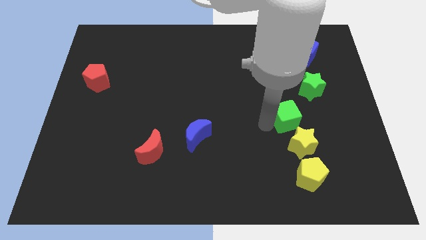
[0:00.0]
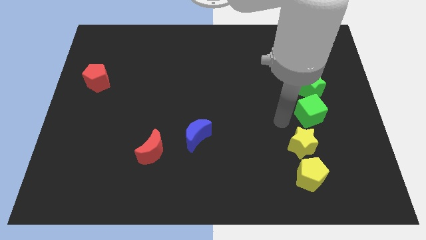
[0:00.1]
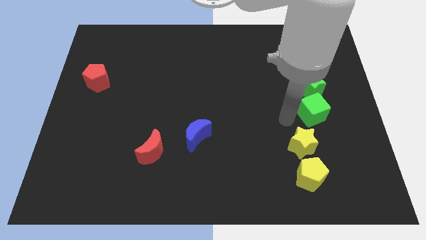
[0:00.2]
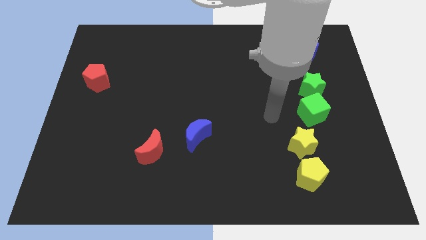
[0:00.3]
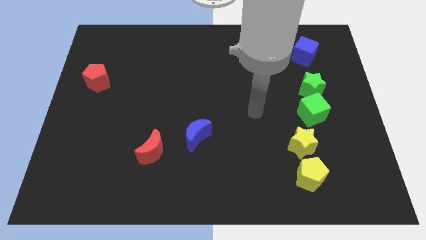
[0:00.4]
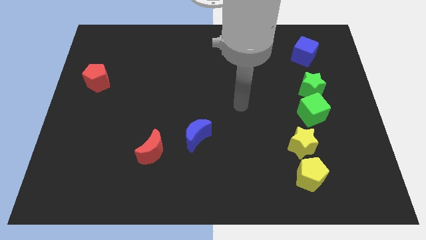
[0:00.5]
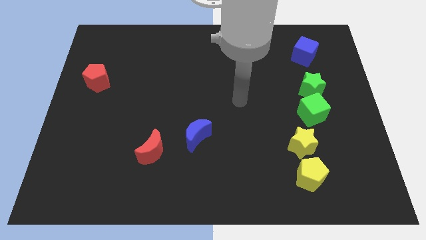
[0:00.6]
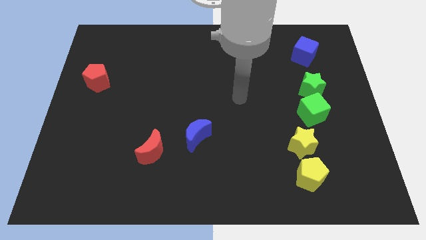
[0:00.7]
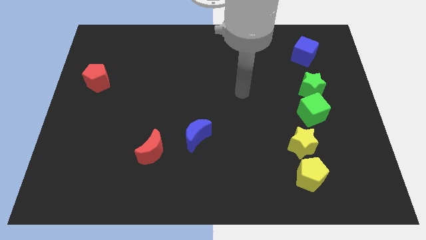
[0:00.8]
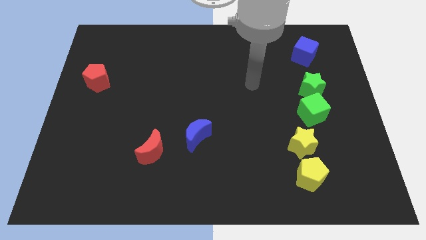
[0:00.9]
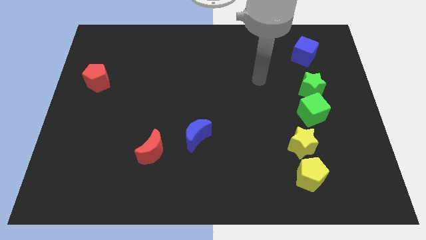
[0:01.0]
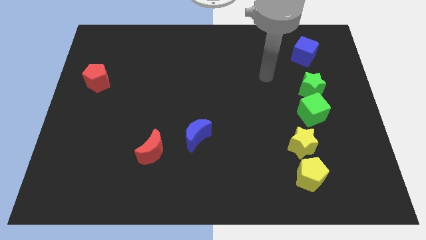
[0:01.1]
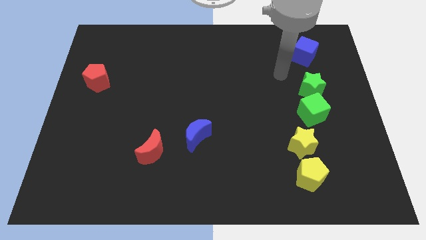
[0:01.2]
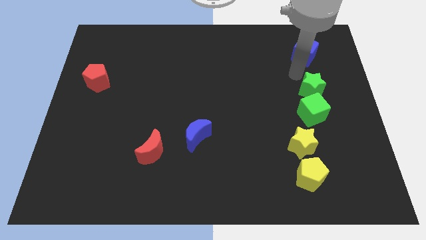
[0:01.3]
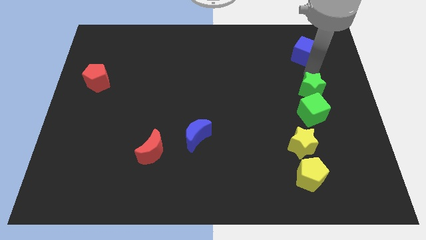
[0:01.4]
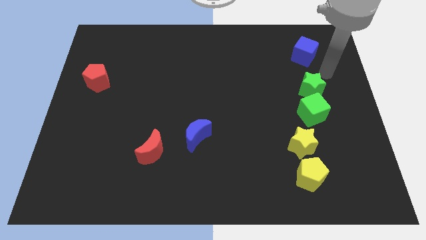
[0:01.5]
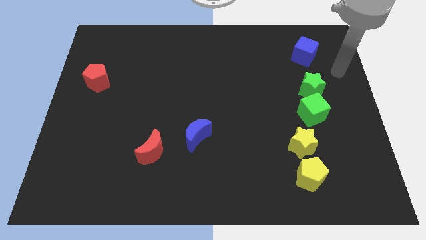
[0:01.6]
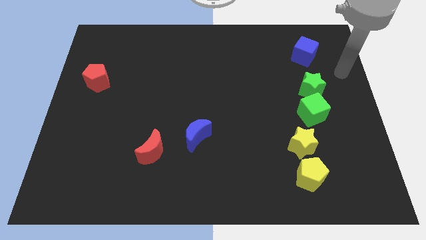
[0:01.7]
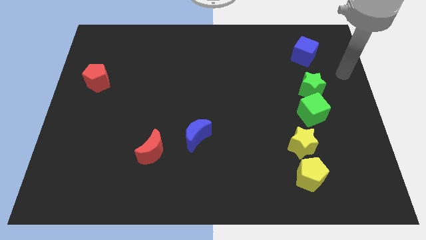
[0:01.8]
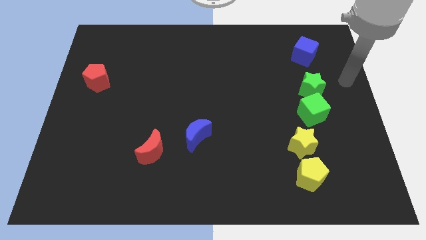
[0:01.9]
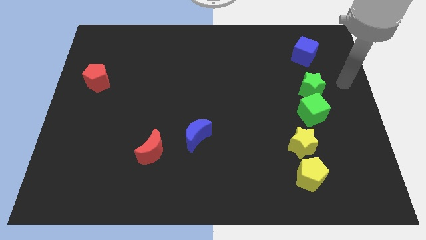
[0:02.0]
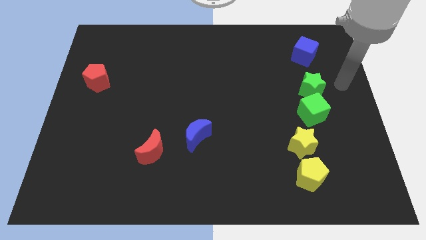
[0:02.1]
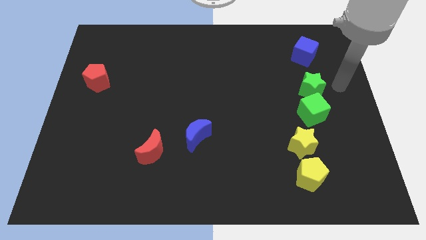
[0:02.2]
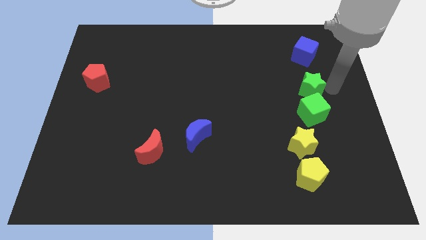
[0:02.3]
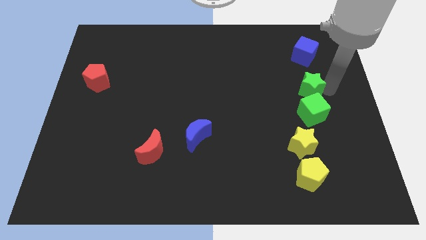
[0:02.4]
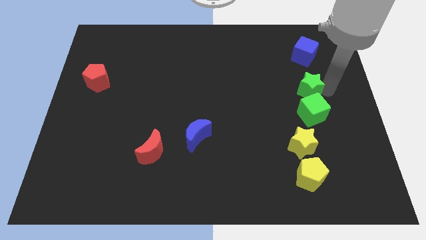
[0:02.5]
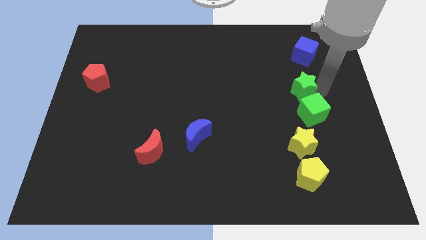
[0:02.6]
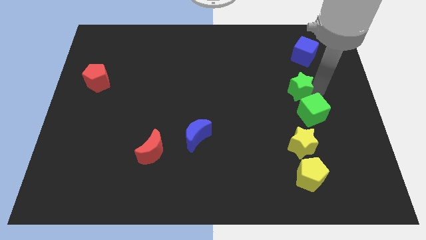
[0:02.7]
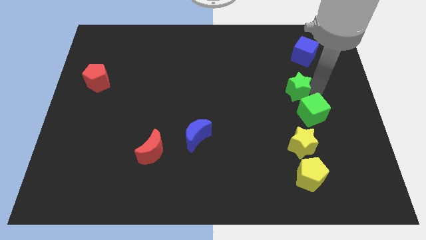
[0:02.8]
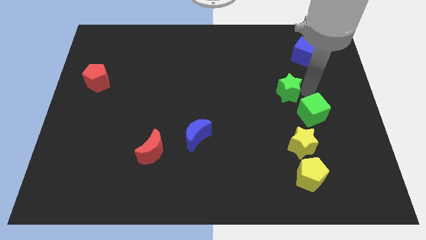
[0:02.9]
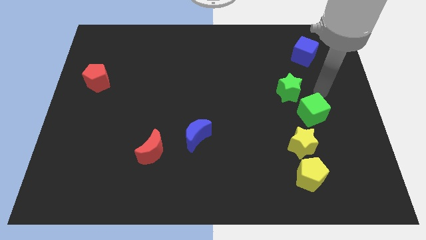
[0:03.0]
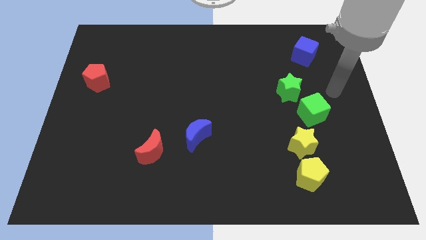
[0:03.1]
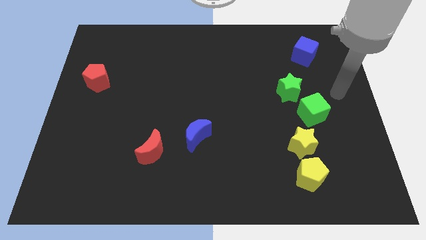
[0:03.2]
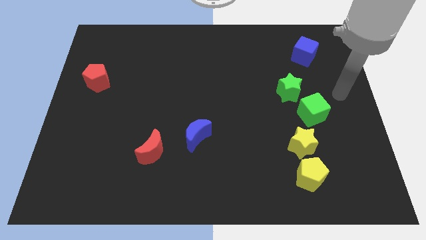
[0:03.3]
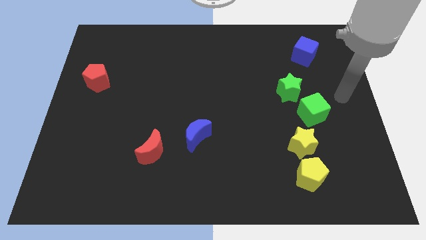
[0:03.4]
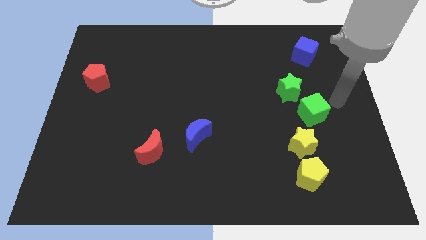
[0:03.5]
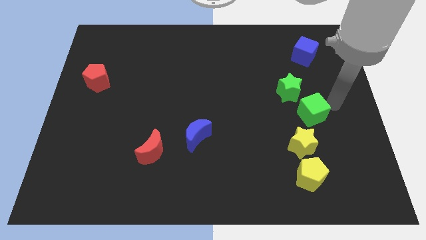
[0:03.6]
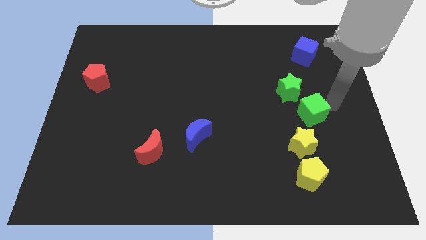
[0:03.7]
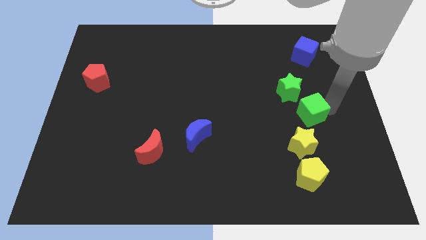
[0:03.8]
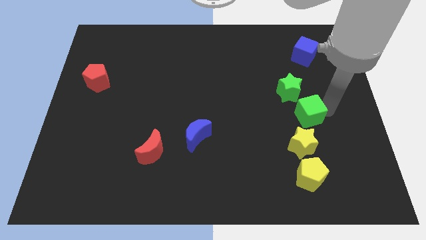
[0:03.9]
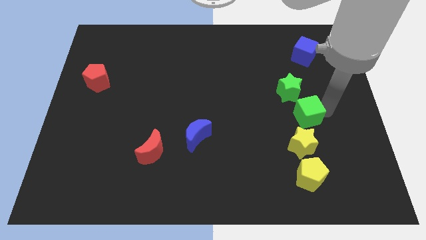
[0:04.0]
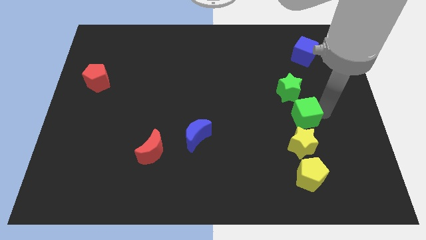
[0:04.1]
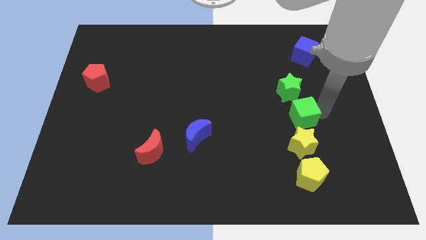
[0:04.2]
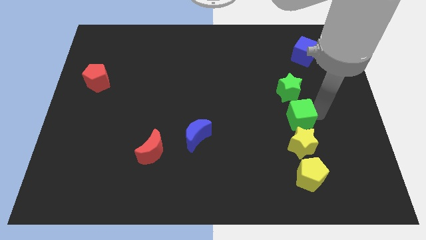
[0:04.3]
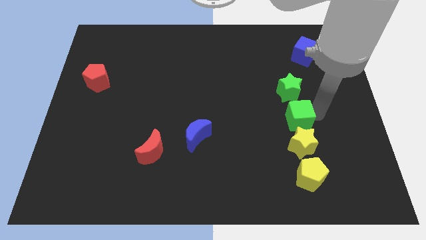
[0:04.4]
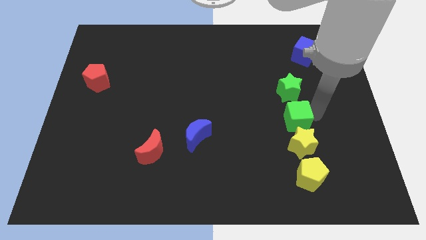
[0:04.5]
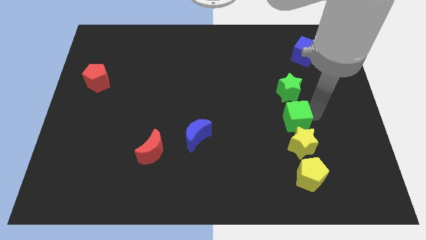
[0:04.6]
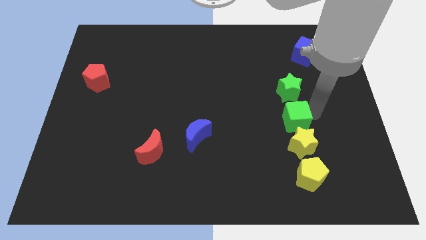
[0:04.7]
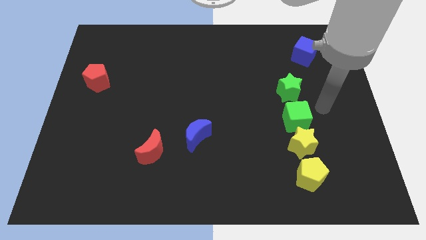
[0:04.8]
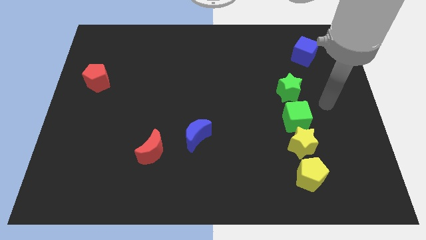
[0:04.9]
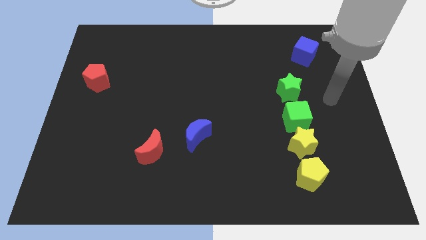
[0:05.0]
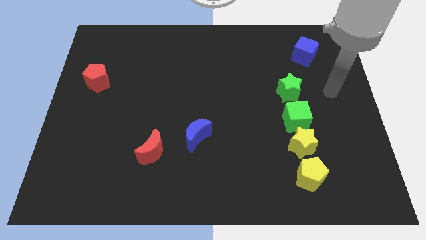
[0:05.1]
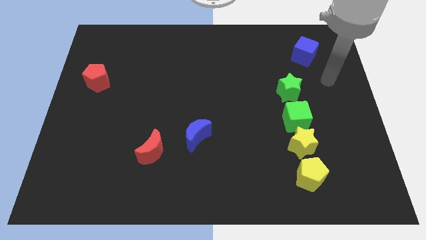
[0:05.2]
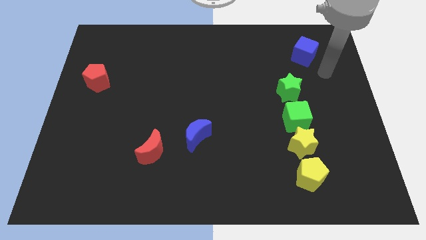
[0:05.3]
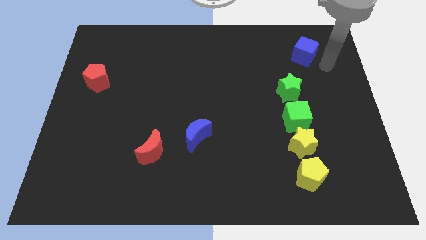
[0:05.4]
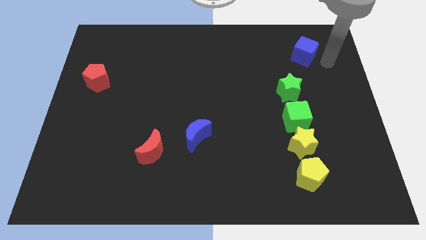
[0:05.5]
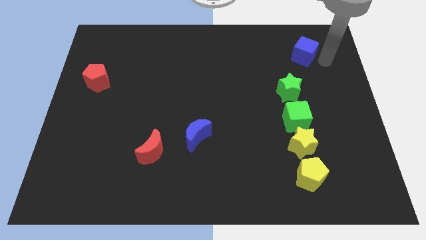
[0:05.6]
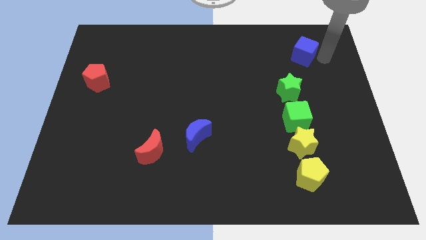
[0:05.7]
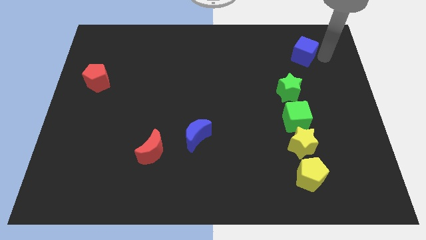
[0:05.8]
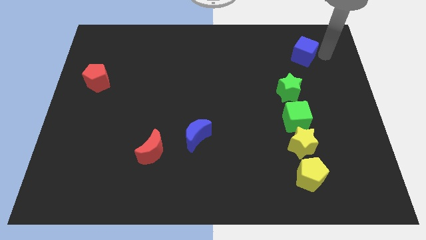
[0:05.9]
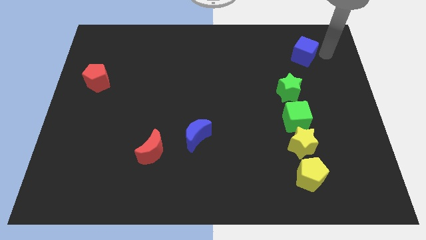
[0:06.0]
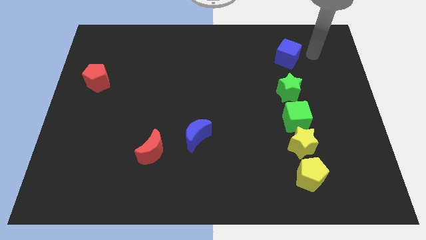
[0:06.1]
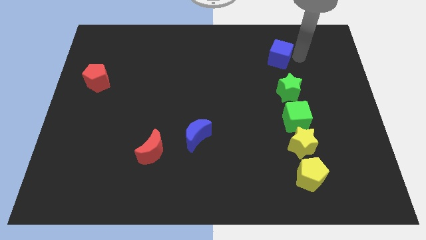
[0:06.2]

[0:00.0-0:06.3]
arrange a group of blocks in a line

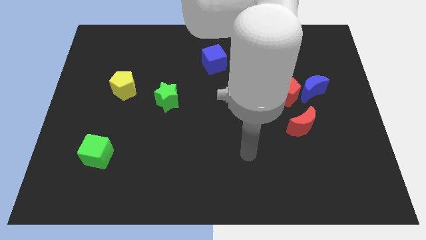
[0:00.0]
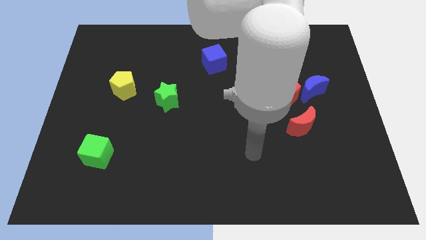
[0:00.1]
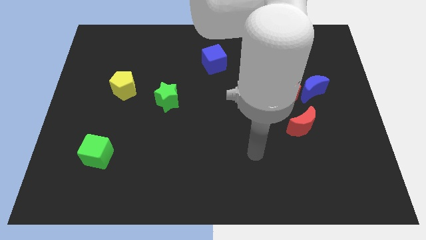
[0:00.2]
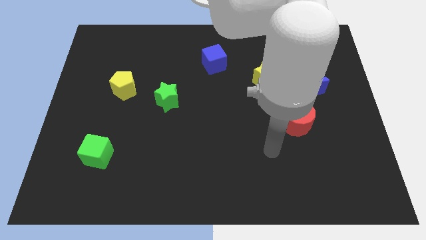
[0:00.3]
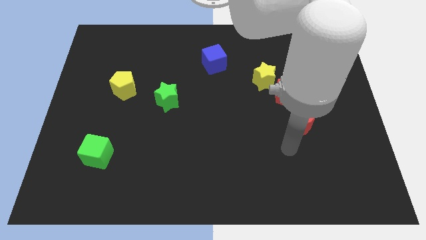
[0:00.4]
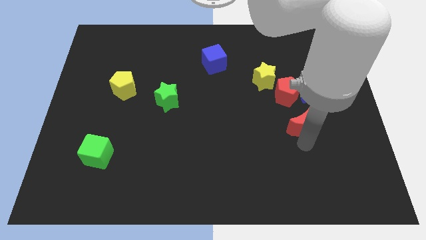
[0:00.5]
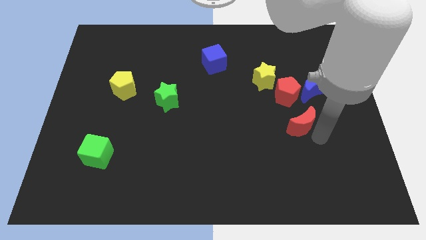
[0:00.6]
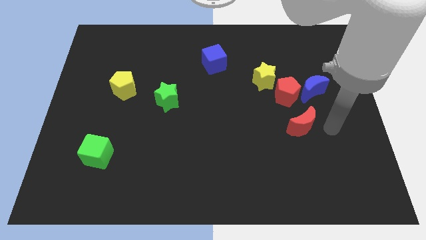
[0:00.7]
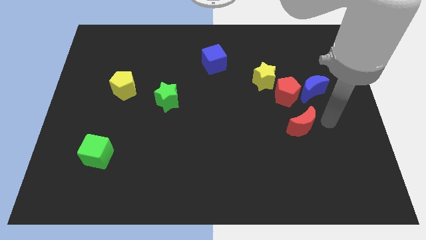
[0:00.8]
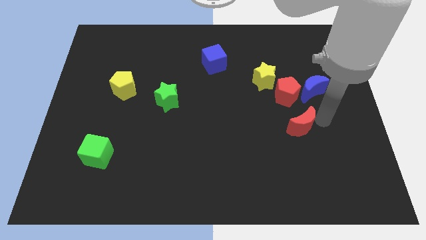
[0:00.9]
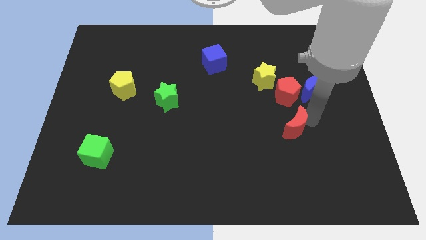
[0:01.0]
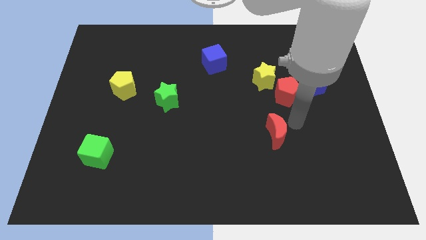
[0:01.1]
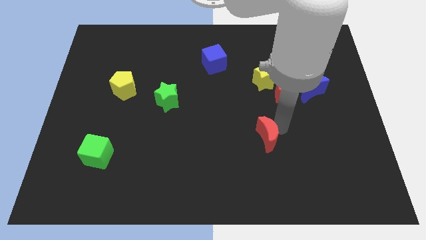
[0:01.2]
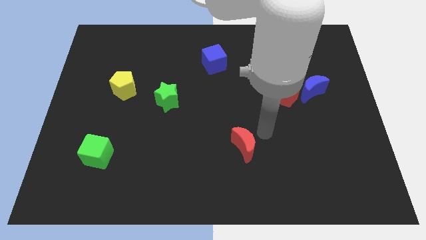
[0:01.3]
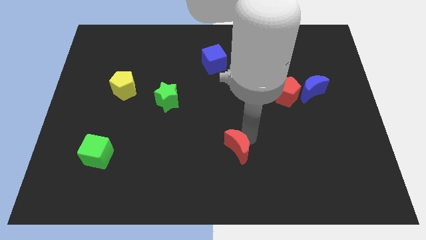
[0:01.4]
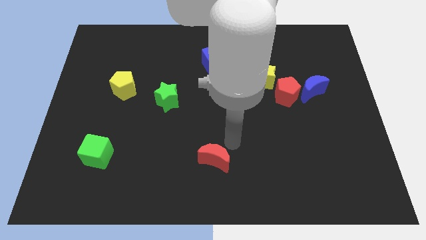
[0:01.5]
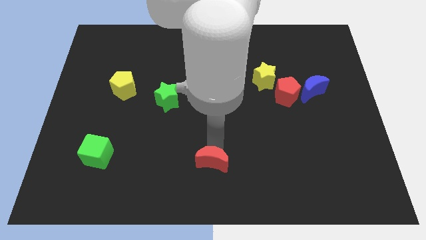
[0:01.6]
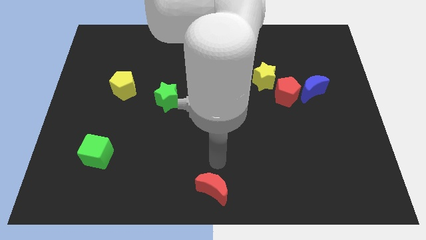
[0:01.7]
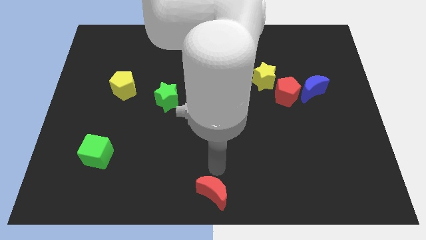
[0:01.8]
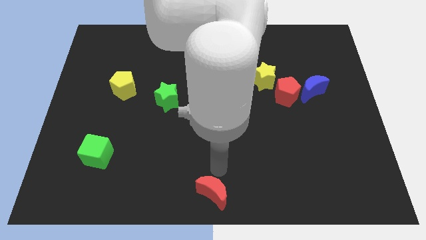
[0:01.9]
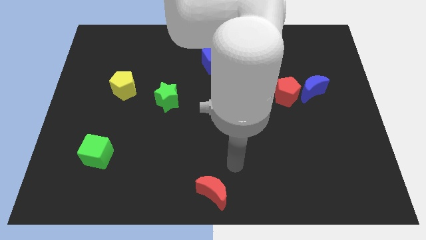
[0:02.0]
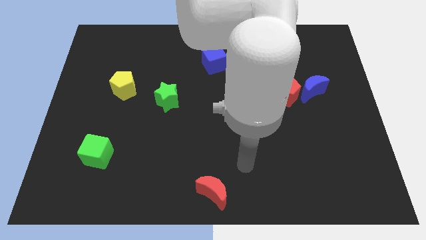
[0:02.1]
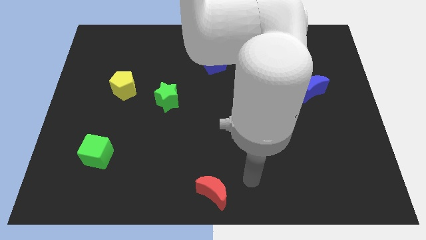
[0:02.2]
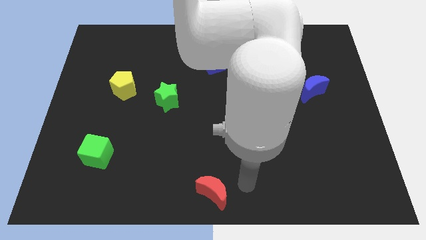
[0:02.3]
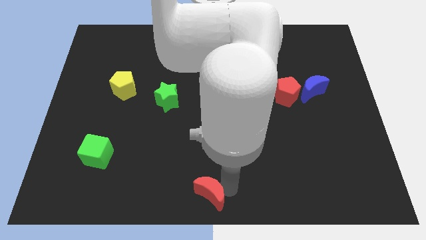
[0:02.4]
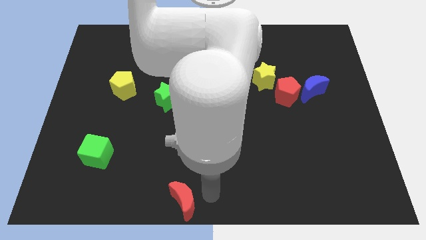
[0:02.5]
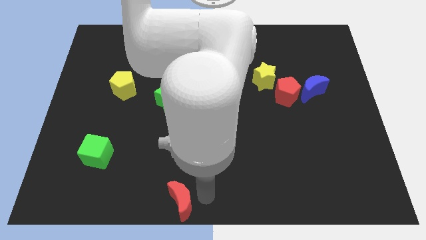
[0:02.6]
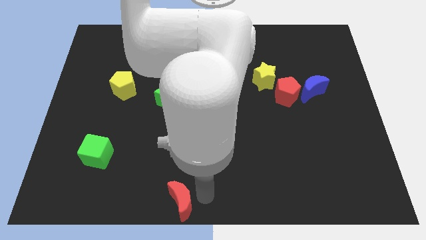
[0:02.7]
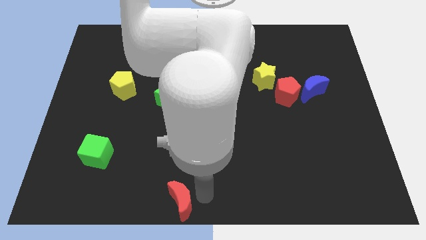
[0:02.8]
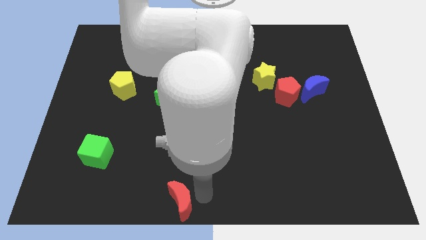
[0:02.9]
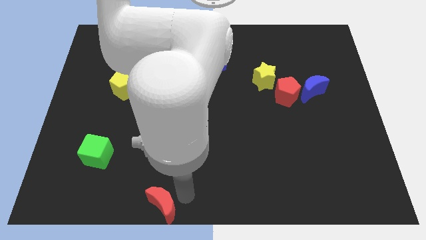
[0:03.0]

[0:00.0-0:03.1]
place the red moon towards the bottom side of the board
